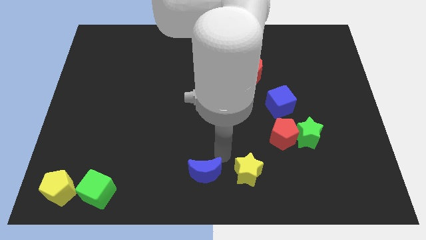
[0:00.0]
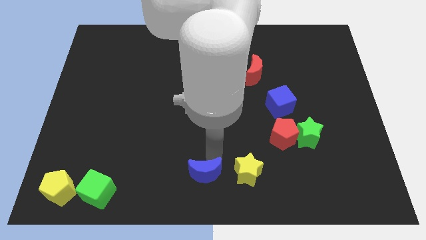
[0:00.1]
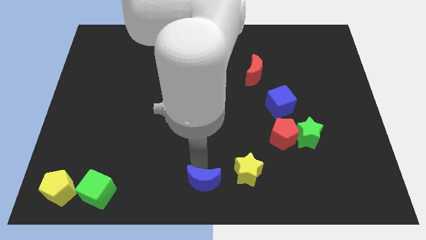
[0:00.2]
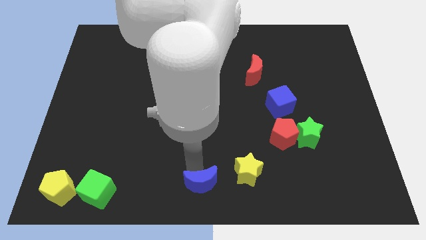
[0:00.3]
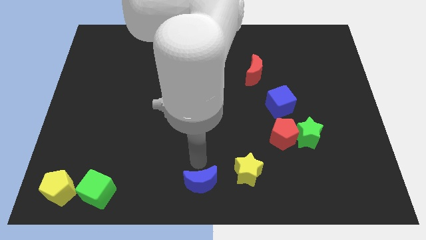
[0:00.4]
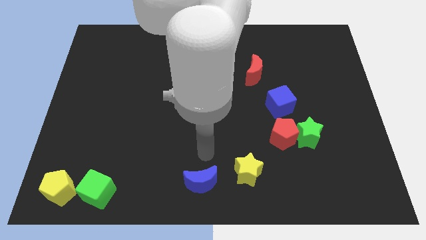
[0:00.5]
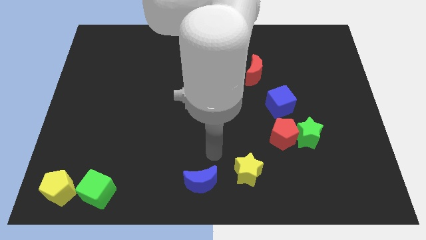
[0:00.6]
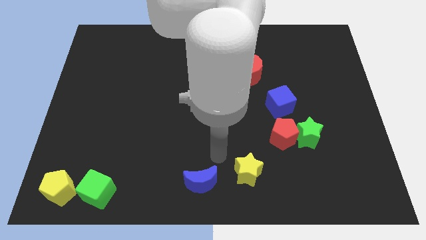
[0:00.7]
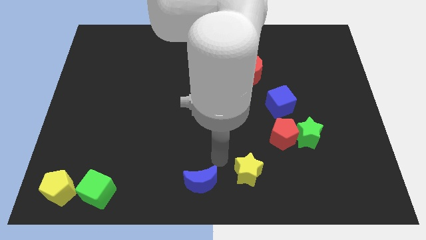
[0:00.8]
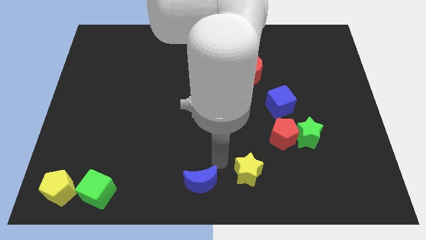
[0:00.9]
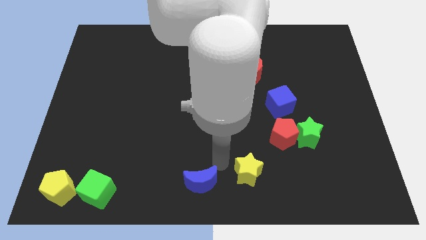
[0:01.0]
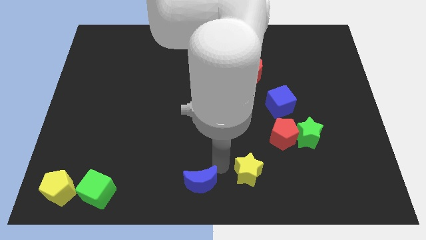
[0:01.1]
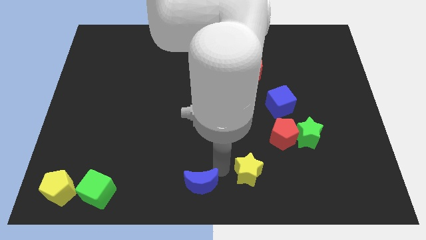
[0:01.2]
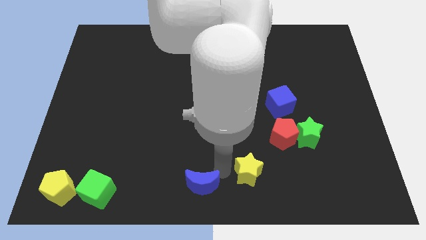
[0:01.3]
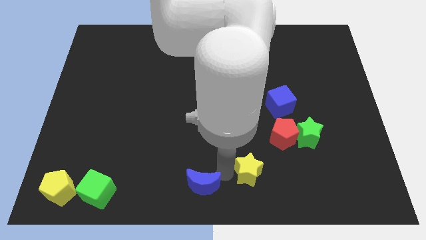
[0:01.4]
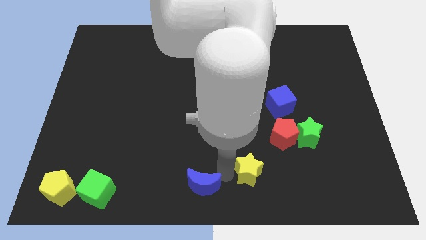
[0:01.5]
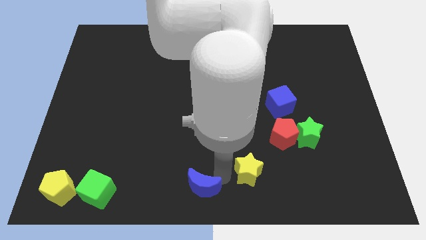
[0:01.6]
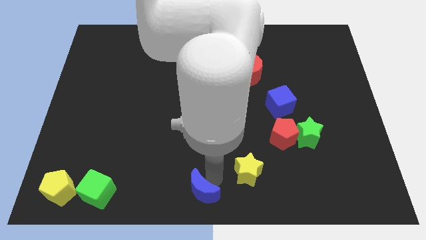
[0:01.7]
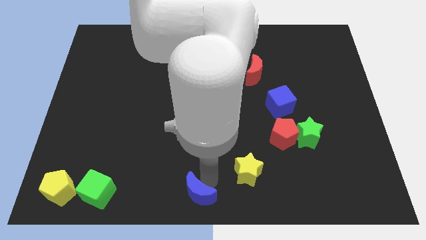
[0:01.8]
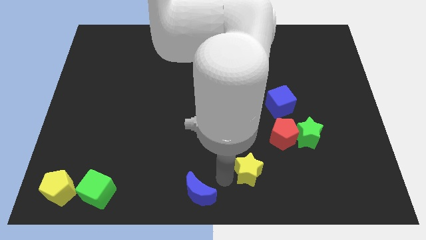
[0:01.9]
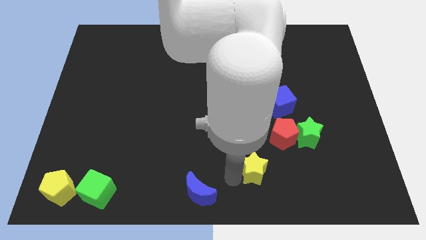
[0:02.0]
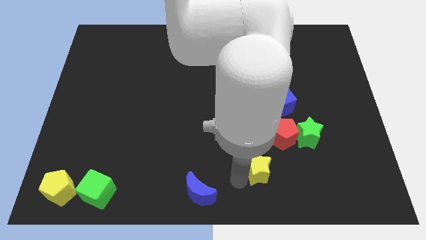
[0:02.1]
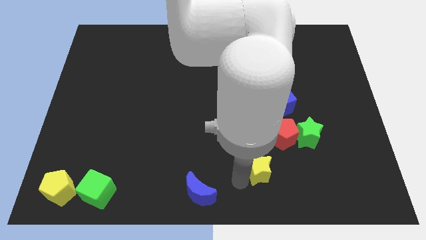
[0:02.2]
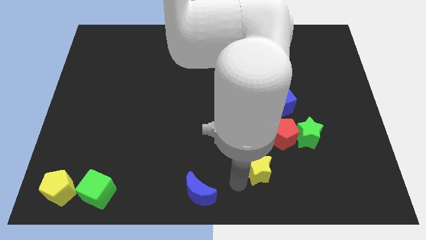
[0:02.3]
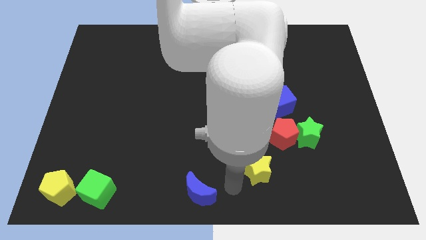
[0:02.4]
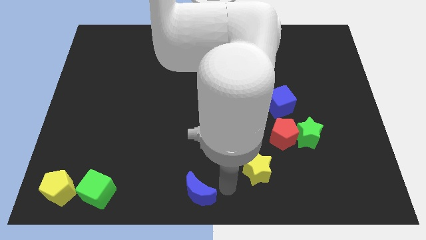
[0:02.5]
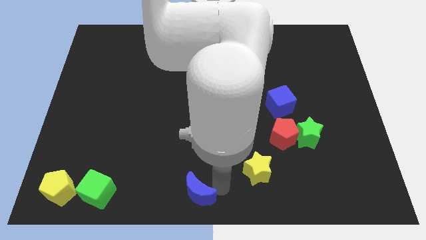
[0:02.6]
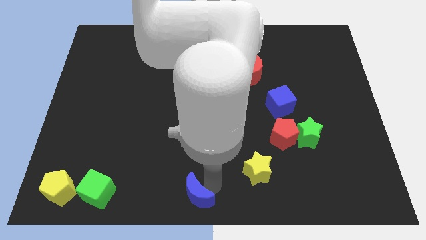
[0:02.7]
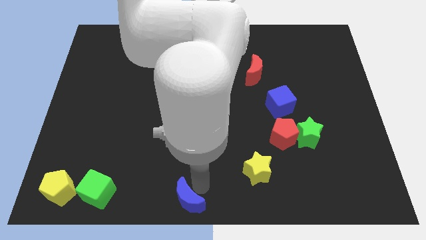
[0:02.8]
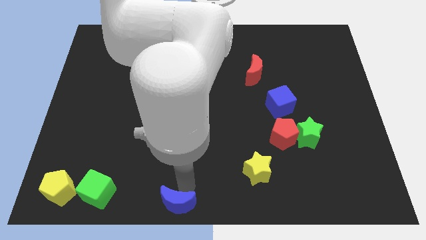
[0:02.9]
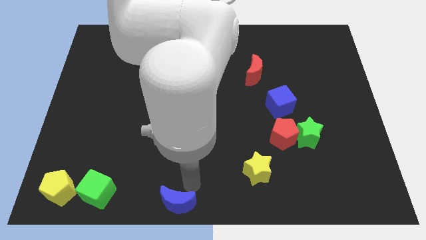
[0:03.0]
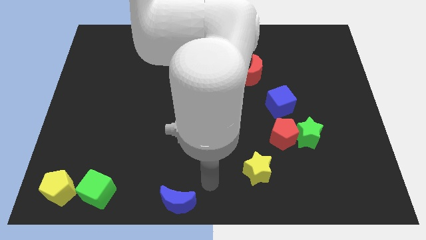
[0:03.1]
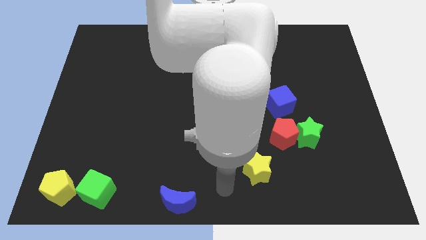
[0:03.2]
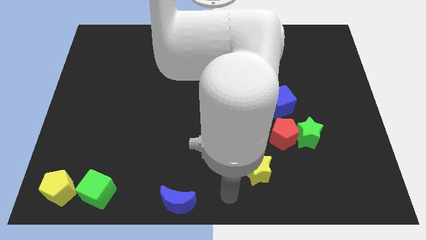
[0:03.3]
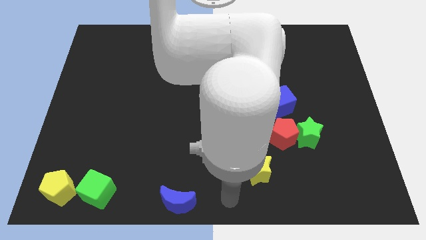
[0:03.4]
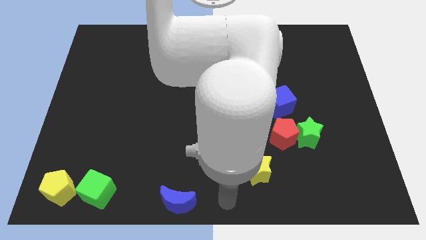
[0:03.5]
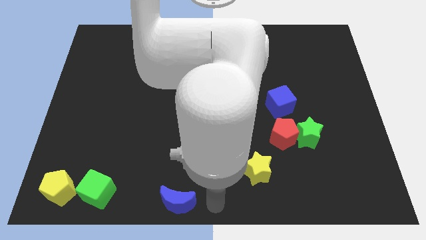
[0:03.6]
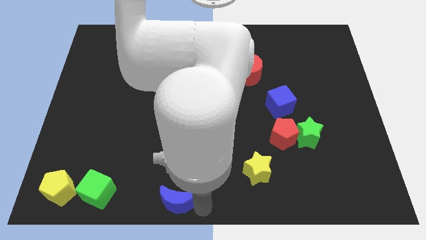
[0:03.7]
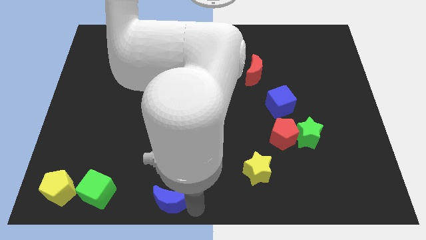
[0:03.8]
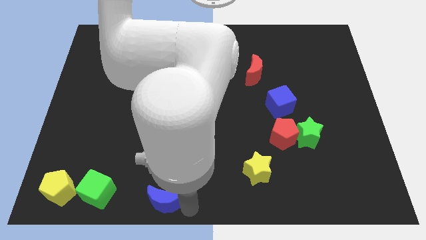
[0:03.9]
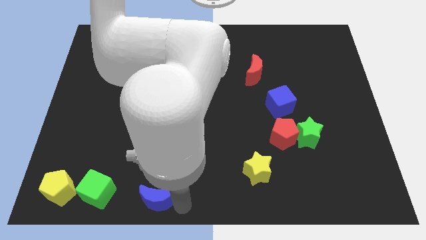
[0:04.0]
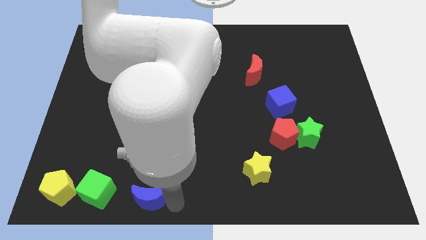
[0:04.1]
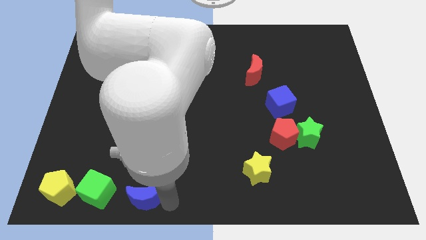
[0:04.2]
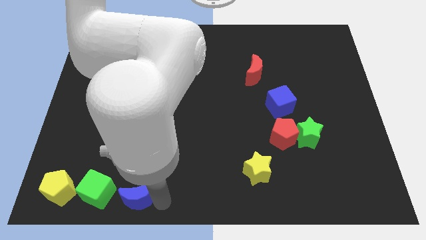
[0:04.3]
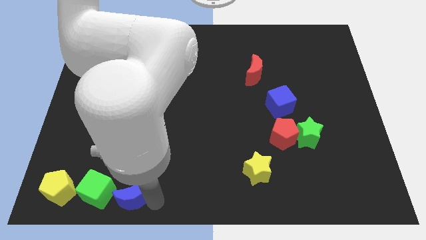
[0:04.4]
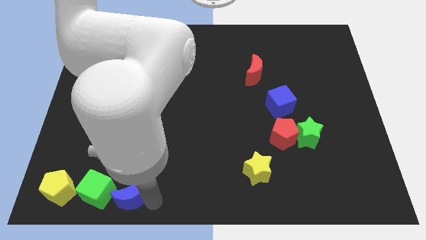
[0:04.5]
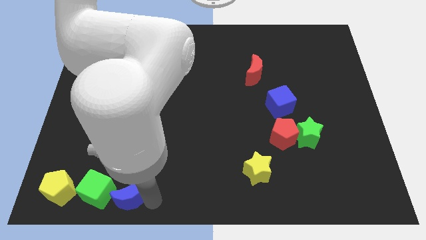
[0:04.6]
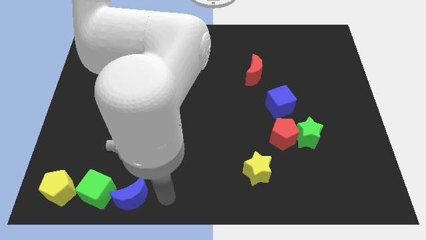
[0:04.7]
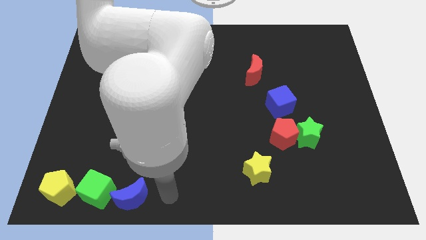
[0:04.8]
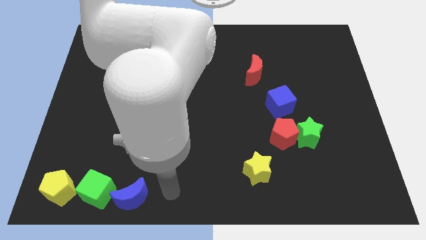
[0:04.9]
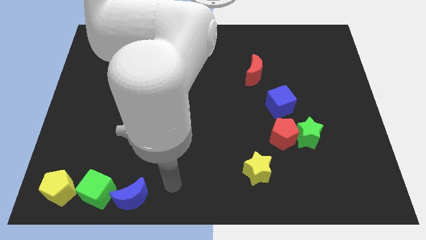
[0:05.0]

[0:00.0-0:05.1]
slide the blue moon to the right of the green cube

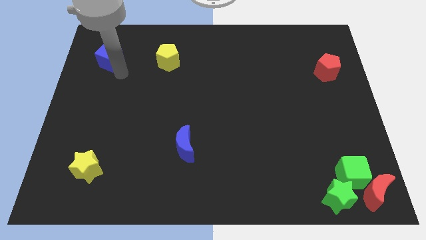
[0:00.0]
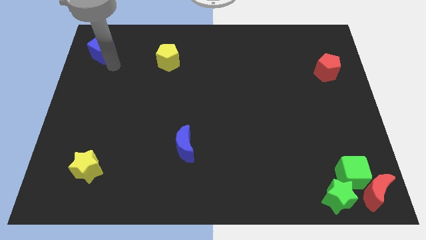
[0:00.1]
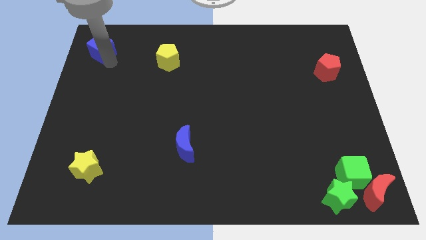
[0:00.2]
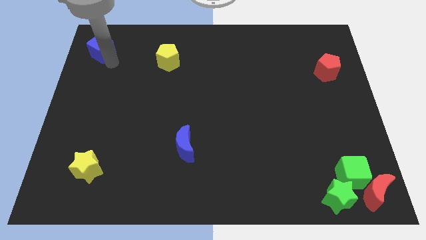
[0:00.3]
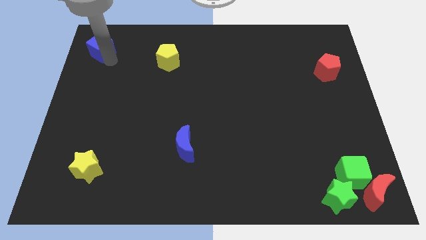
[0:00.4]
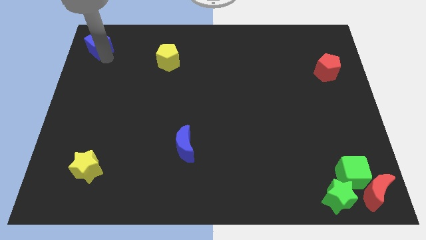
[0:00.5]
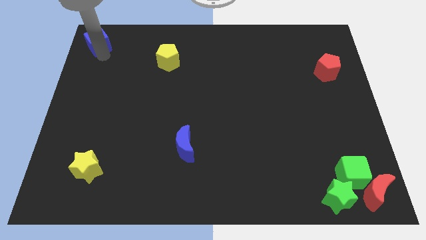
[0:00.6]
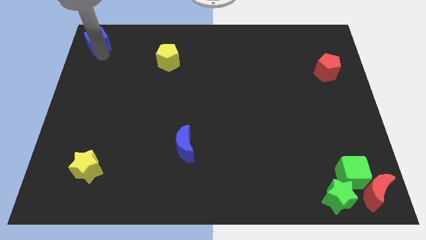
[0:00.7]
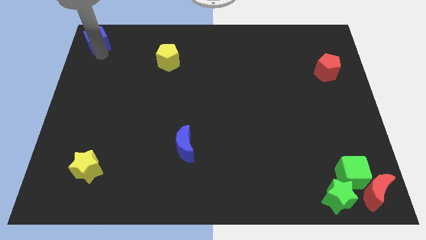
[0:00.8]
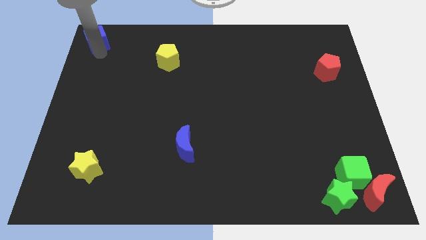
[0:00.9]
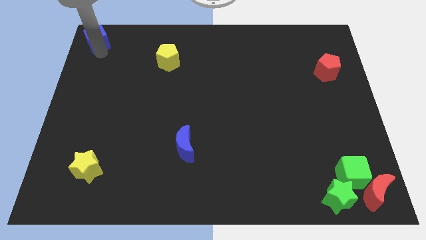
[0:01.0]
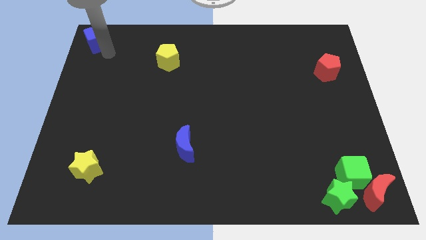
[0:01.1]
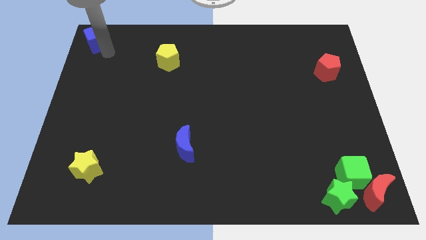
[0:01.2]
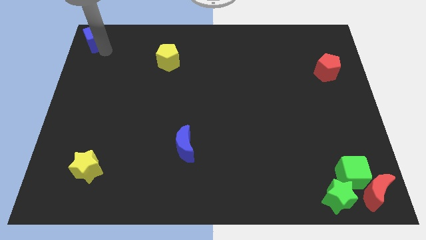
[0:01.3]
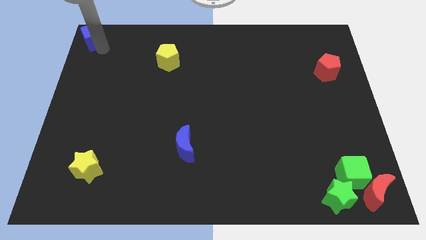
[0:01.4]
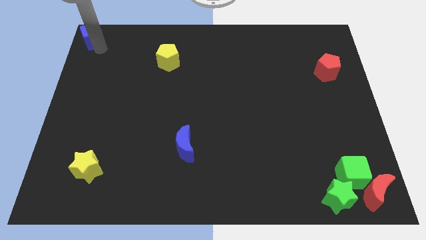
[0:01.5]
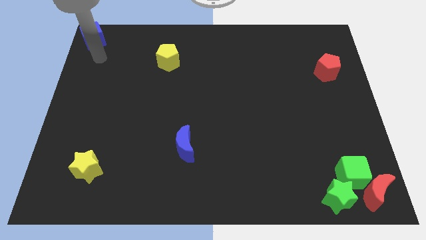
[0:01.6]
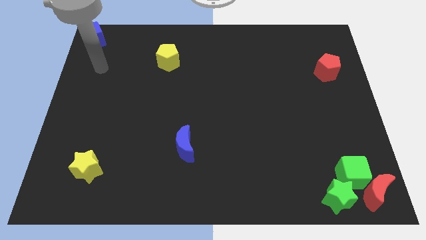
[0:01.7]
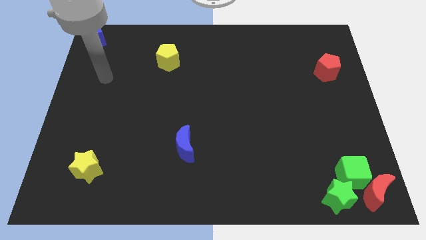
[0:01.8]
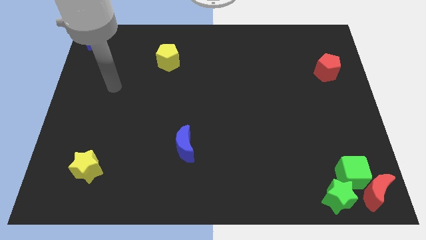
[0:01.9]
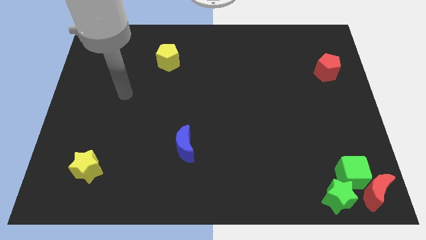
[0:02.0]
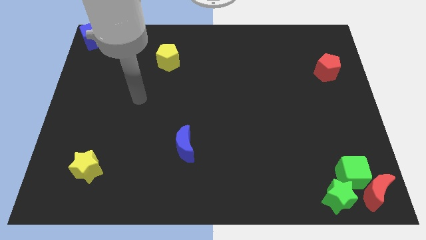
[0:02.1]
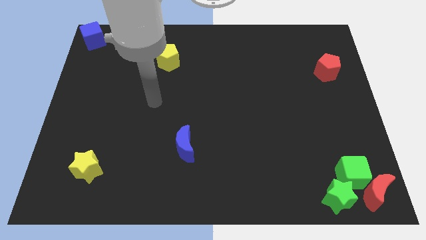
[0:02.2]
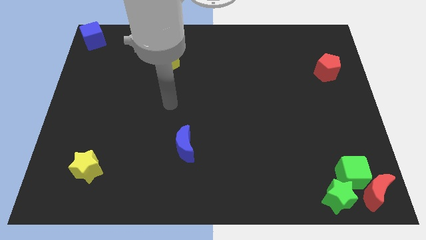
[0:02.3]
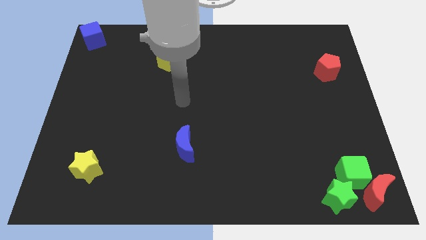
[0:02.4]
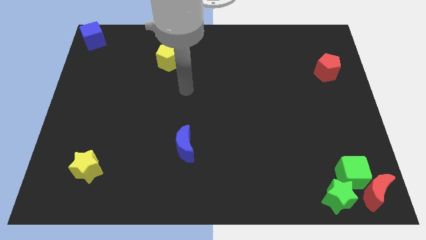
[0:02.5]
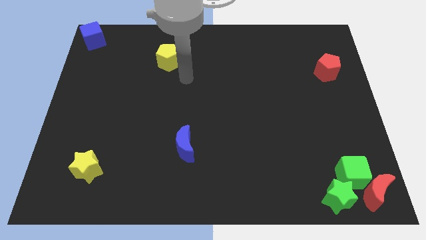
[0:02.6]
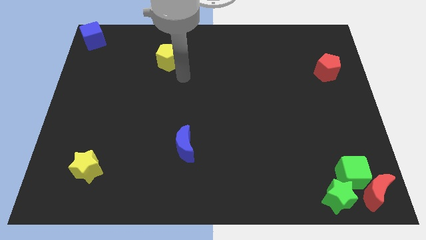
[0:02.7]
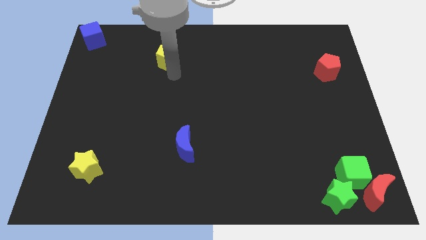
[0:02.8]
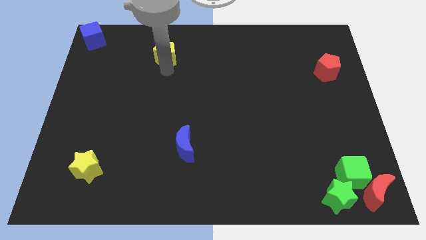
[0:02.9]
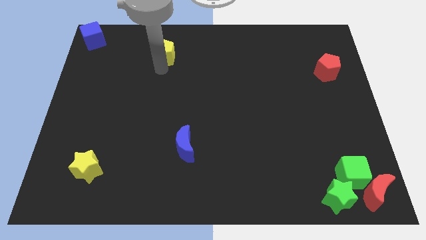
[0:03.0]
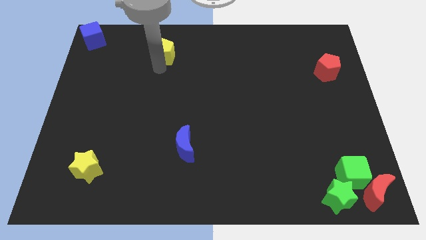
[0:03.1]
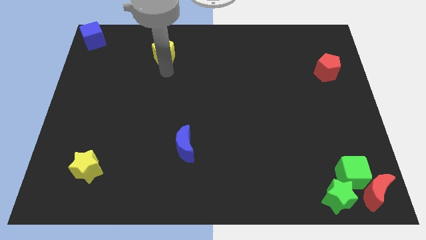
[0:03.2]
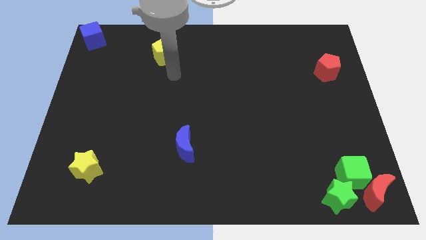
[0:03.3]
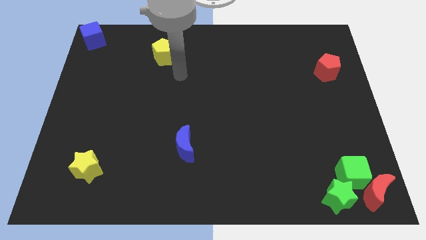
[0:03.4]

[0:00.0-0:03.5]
push the blue cube to the left top

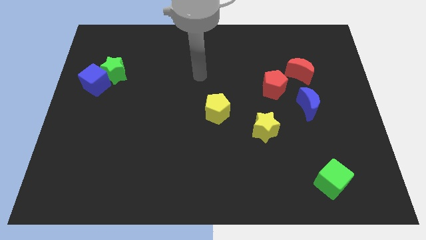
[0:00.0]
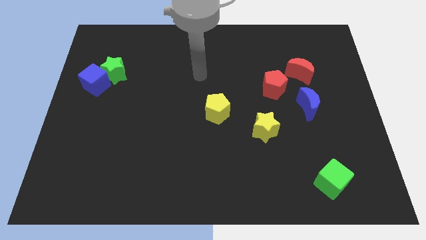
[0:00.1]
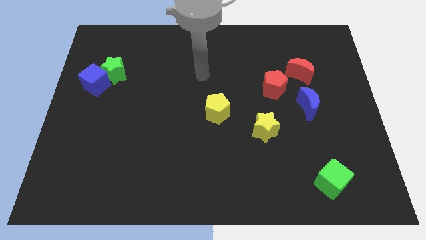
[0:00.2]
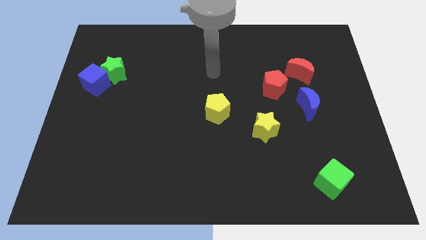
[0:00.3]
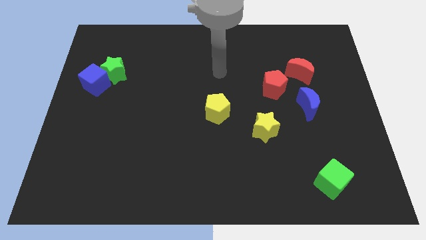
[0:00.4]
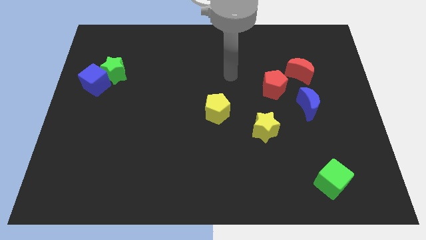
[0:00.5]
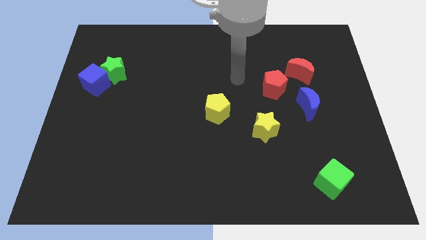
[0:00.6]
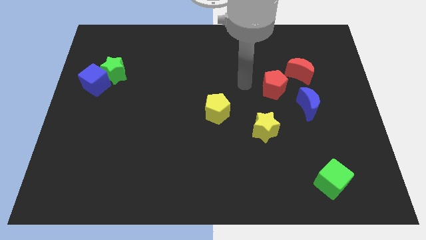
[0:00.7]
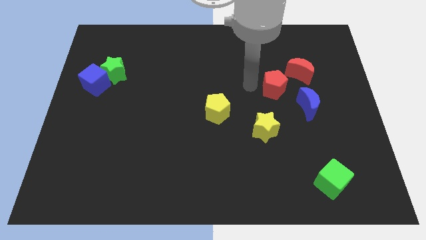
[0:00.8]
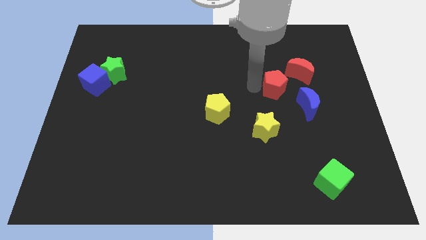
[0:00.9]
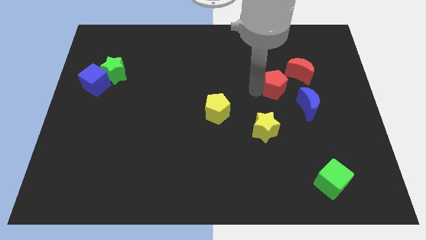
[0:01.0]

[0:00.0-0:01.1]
slide your arm to the left of red pentagon
